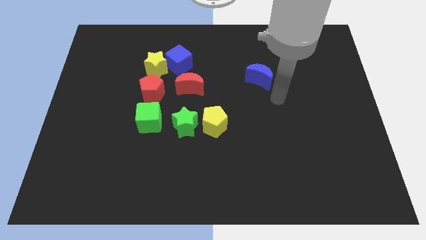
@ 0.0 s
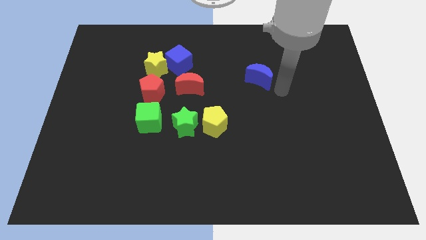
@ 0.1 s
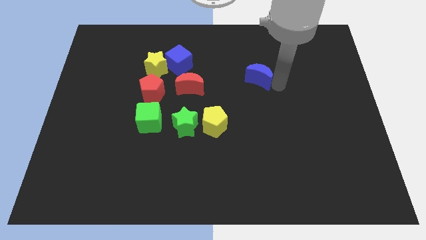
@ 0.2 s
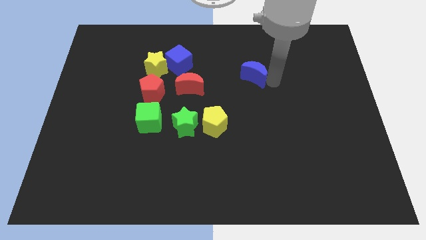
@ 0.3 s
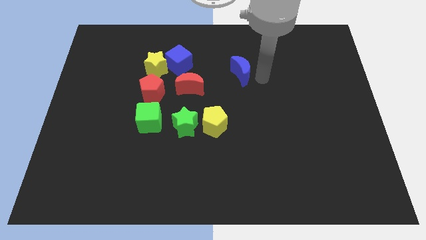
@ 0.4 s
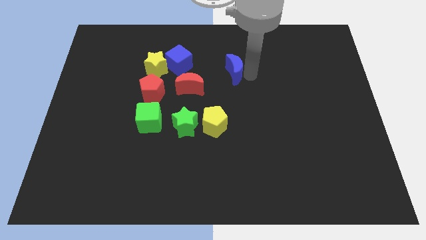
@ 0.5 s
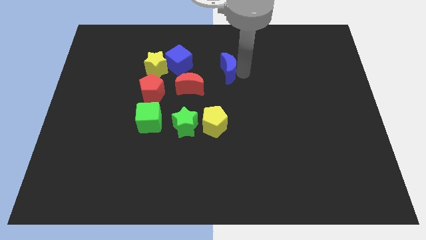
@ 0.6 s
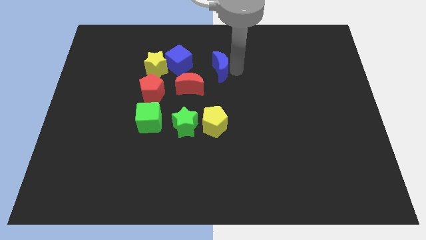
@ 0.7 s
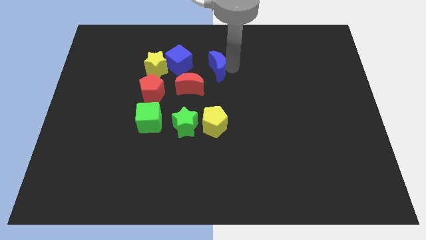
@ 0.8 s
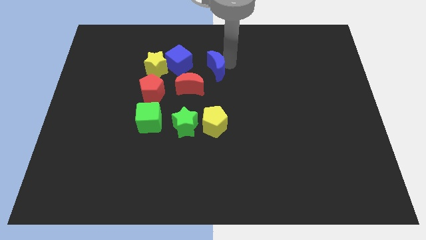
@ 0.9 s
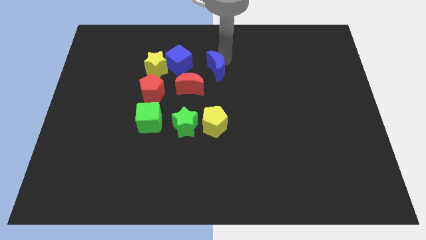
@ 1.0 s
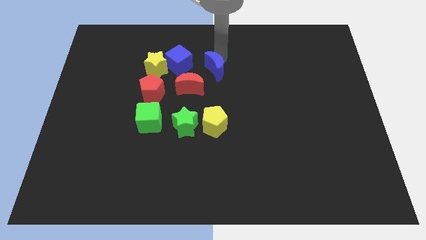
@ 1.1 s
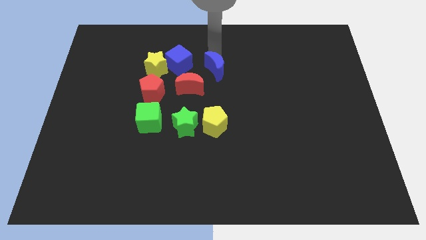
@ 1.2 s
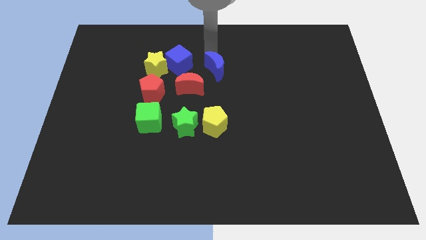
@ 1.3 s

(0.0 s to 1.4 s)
move the blue crescent slightly towards the blue cube

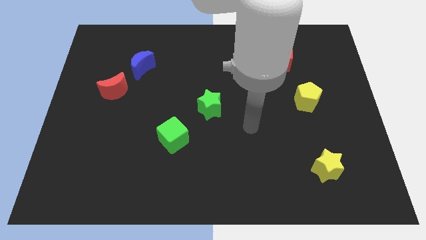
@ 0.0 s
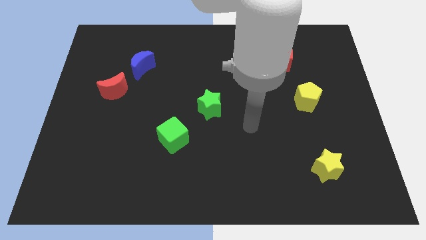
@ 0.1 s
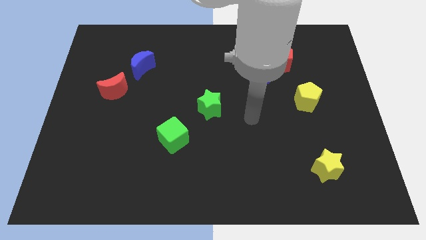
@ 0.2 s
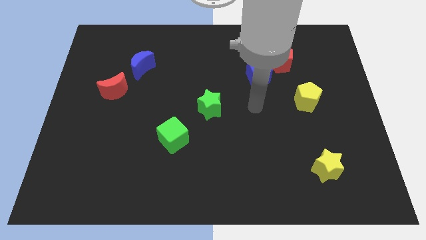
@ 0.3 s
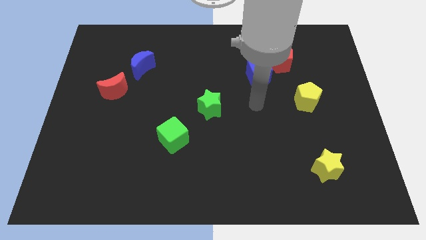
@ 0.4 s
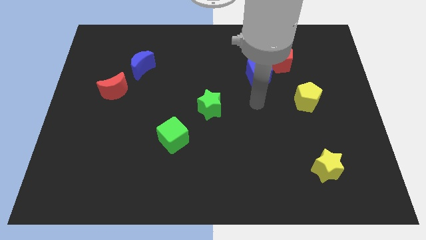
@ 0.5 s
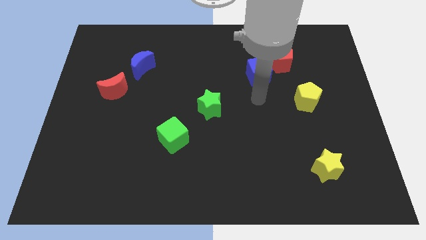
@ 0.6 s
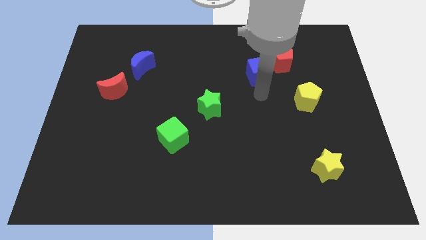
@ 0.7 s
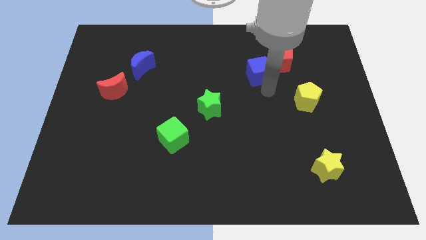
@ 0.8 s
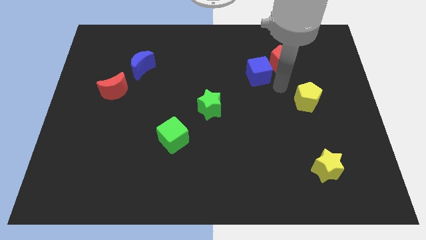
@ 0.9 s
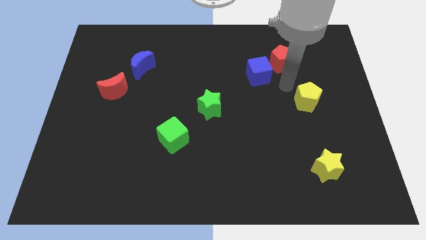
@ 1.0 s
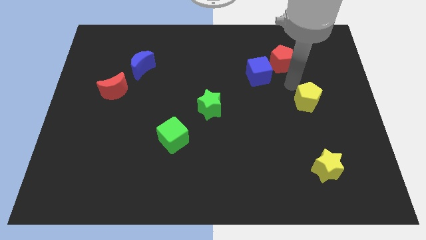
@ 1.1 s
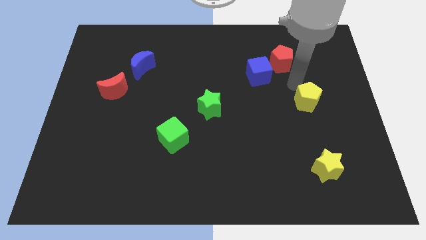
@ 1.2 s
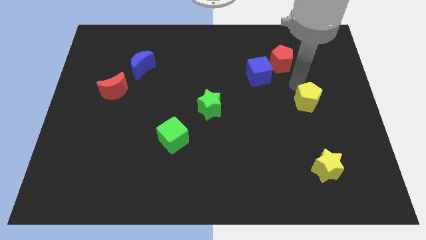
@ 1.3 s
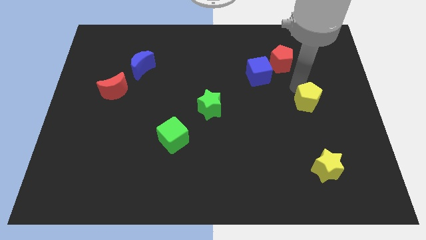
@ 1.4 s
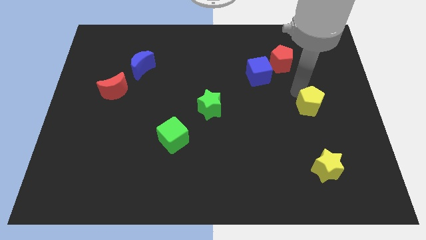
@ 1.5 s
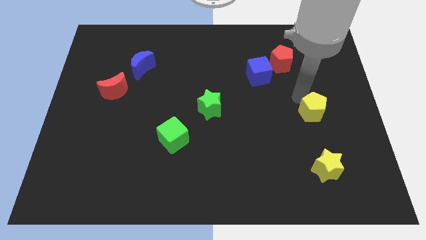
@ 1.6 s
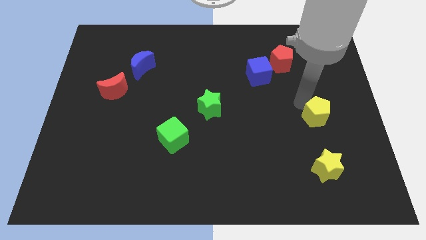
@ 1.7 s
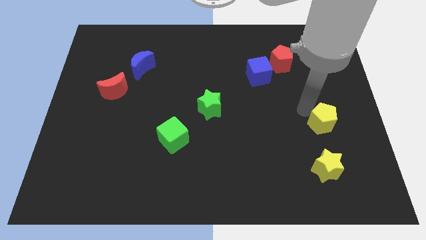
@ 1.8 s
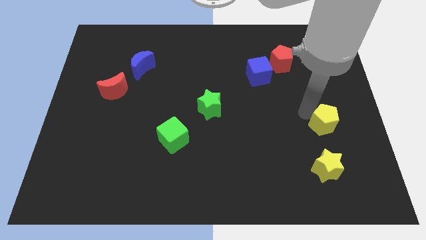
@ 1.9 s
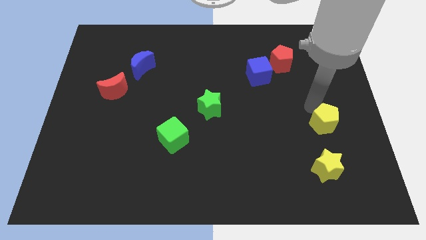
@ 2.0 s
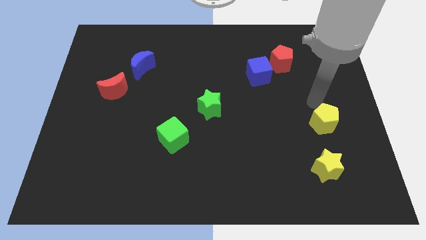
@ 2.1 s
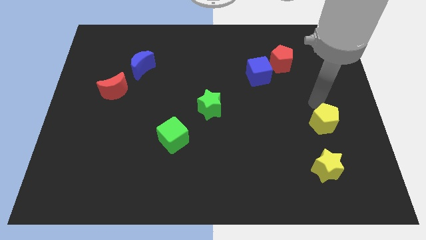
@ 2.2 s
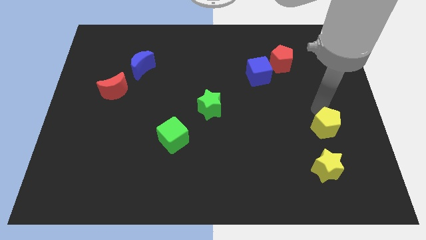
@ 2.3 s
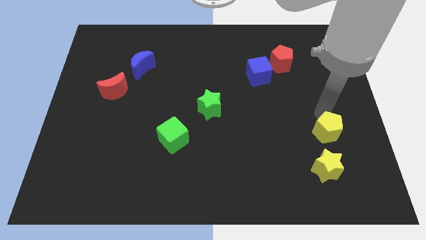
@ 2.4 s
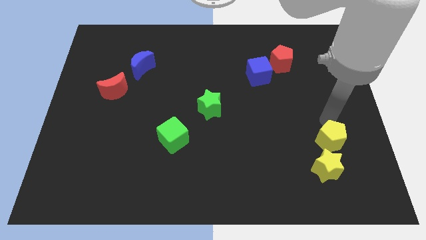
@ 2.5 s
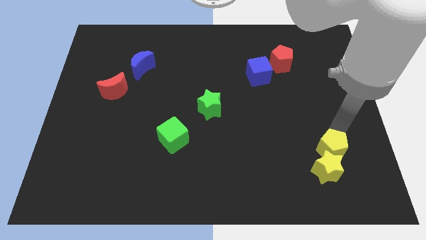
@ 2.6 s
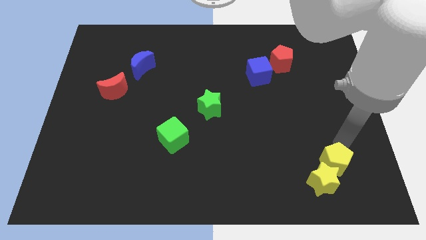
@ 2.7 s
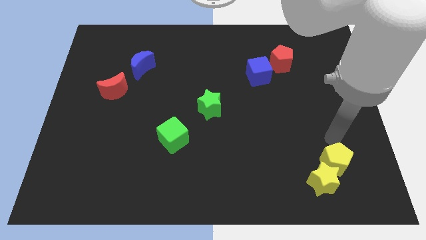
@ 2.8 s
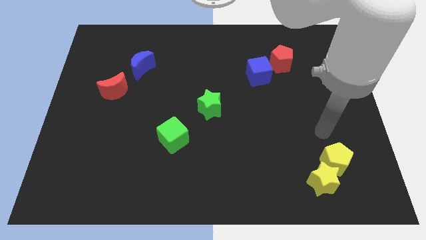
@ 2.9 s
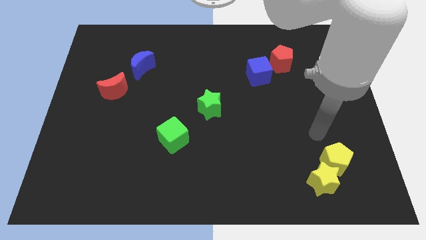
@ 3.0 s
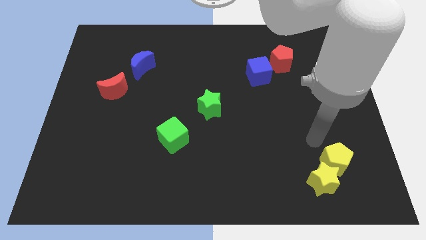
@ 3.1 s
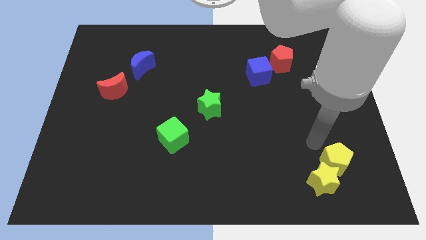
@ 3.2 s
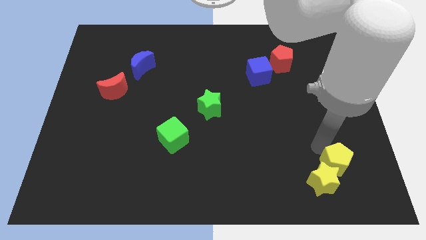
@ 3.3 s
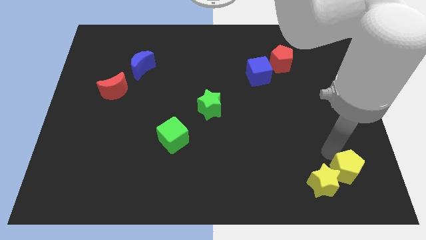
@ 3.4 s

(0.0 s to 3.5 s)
move the yellow pentagon above the yellow star

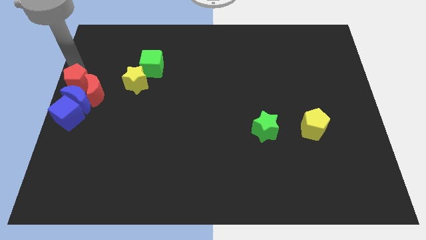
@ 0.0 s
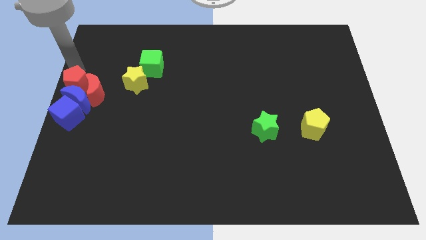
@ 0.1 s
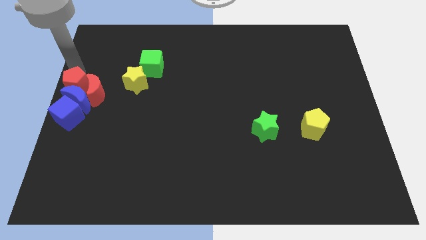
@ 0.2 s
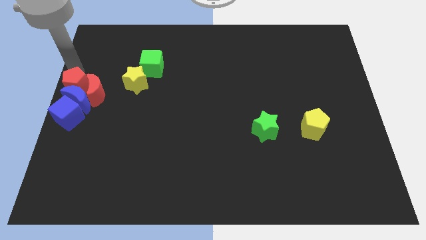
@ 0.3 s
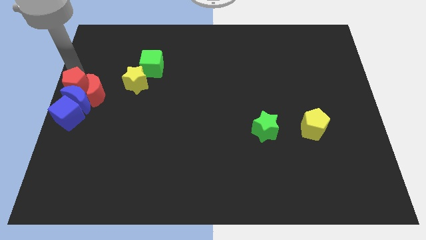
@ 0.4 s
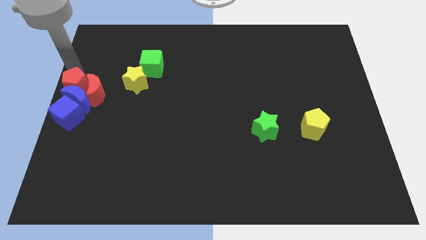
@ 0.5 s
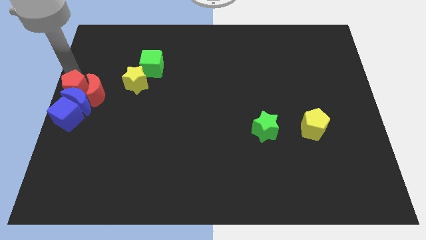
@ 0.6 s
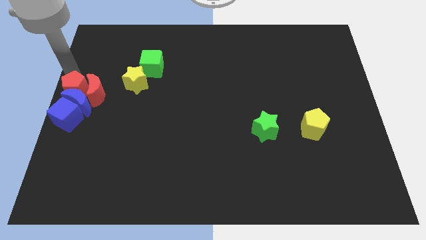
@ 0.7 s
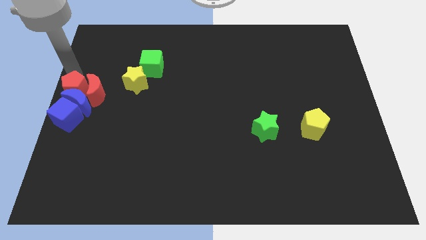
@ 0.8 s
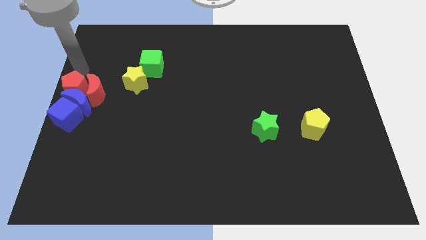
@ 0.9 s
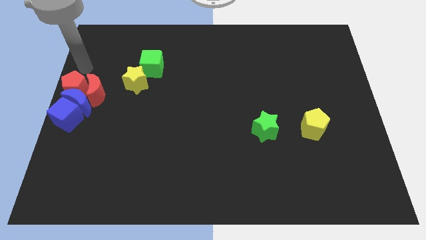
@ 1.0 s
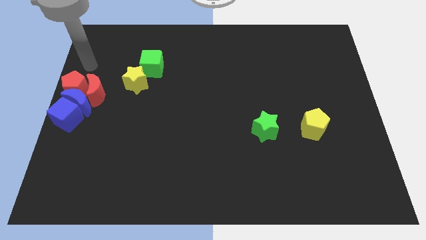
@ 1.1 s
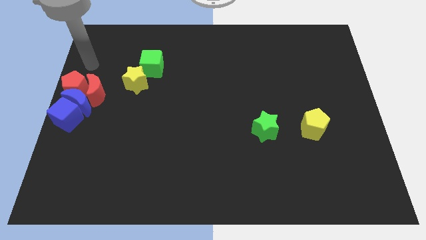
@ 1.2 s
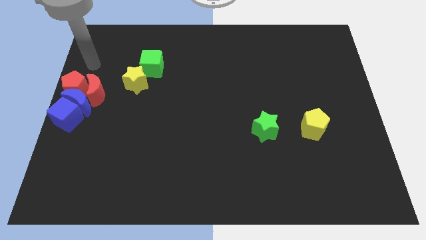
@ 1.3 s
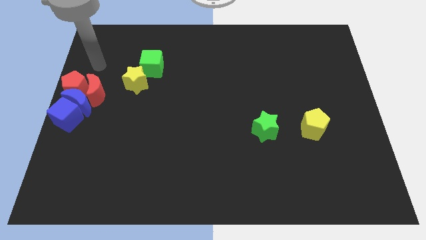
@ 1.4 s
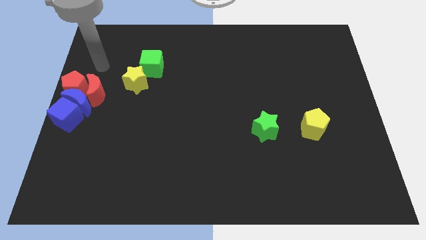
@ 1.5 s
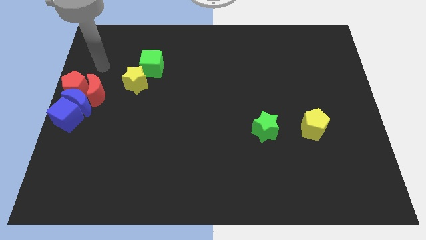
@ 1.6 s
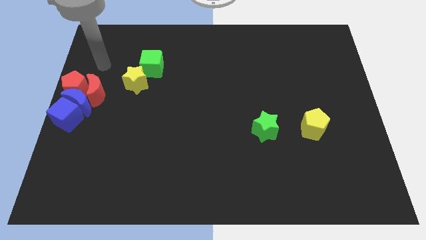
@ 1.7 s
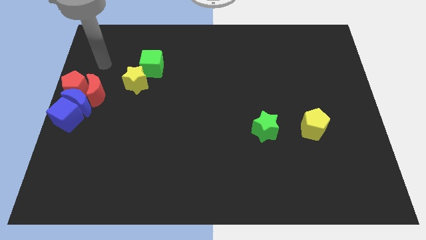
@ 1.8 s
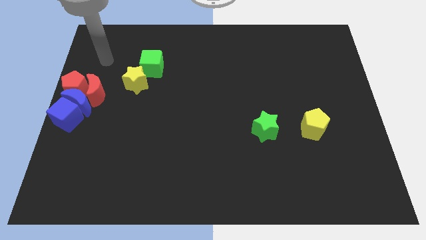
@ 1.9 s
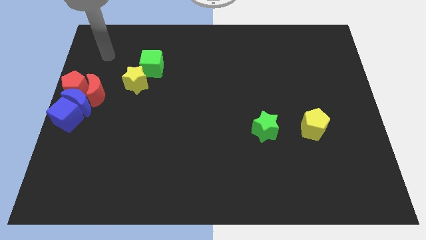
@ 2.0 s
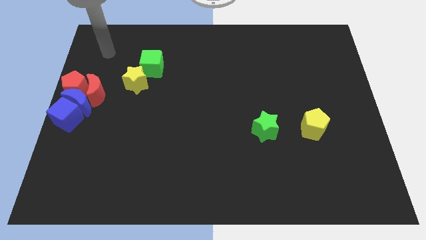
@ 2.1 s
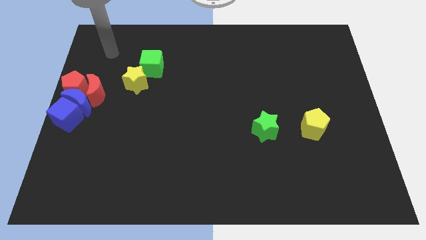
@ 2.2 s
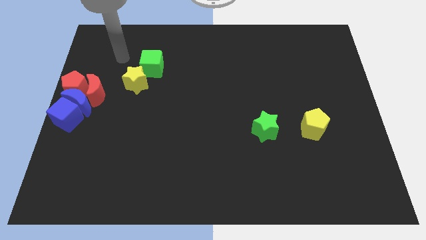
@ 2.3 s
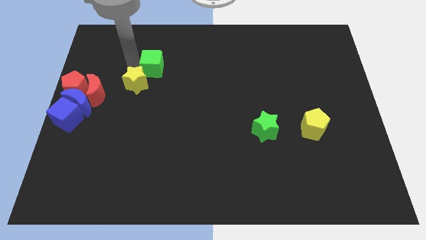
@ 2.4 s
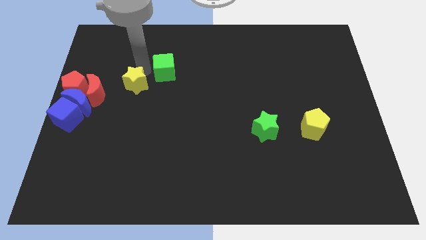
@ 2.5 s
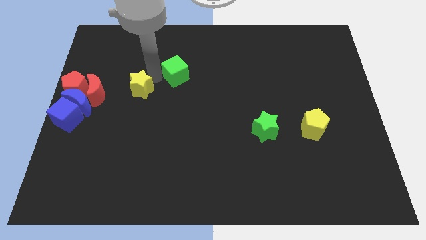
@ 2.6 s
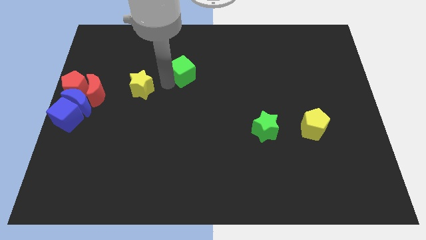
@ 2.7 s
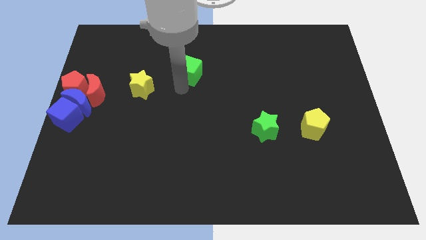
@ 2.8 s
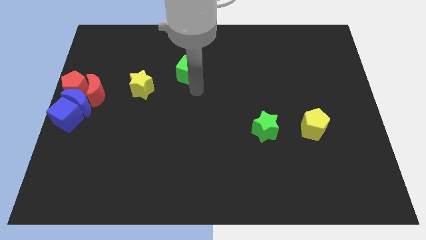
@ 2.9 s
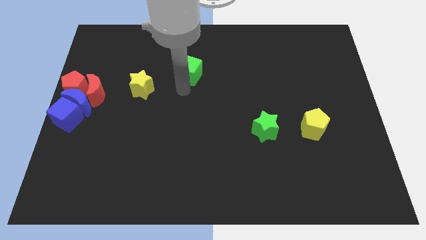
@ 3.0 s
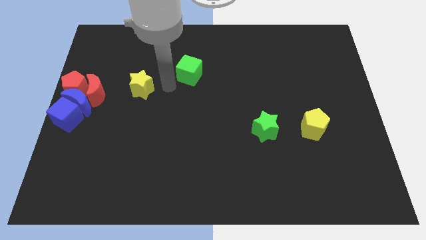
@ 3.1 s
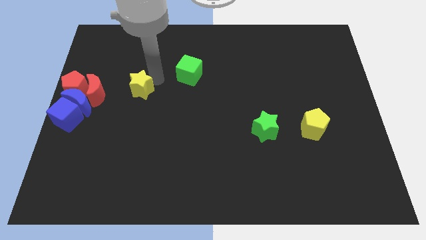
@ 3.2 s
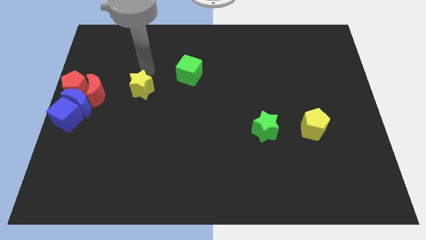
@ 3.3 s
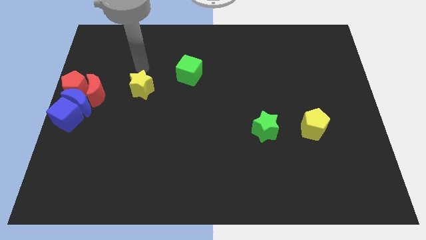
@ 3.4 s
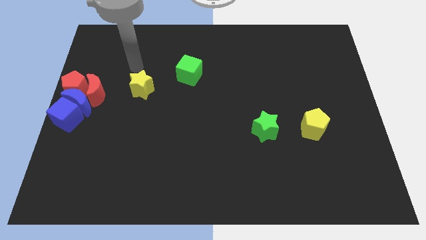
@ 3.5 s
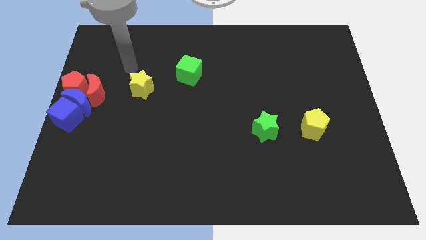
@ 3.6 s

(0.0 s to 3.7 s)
push the green cube towards the right

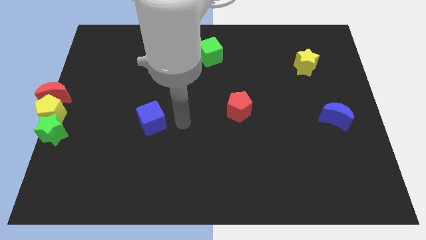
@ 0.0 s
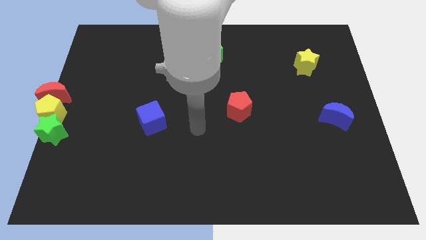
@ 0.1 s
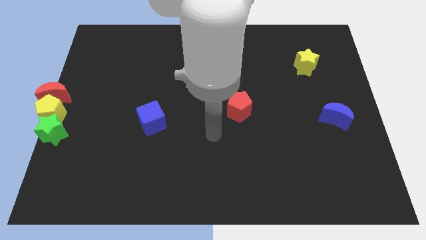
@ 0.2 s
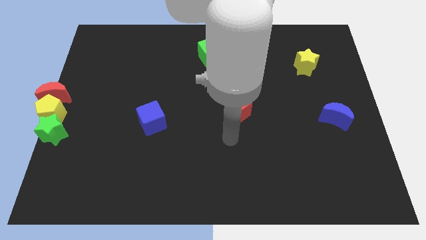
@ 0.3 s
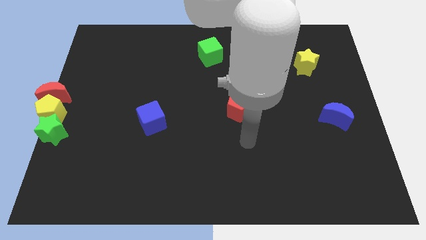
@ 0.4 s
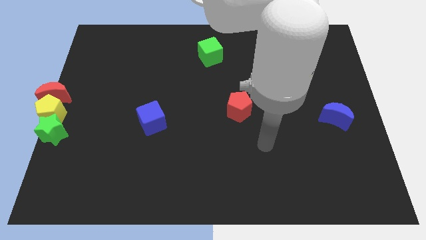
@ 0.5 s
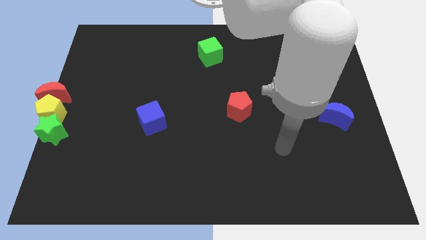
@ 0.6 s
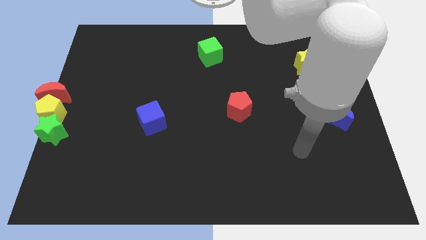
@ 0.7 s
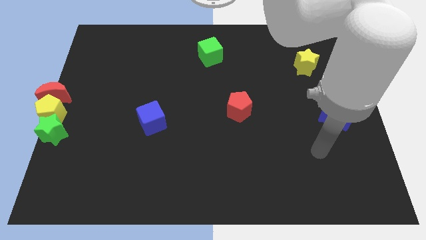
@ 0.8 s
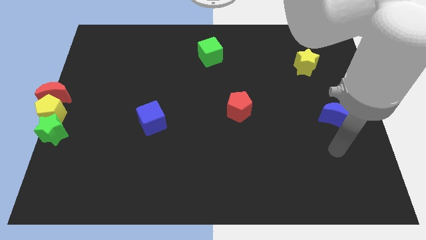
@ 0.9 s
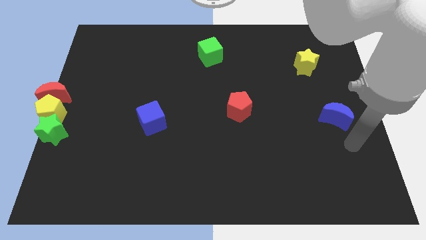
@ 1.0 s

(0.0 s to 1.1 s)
move the arm away from the blue cube
